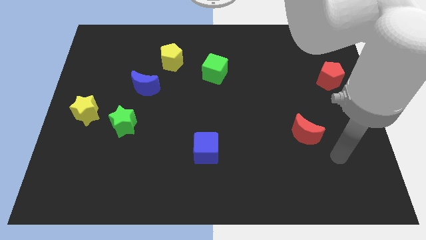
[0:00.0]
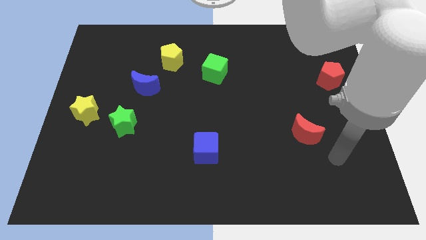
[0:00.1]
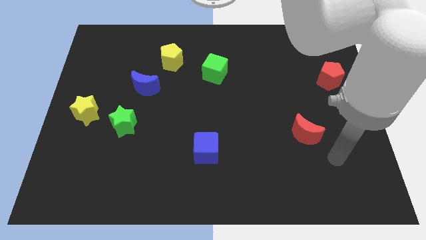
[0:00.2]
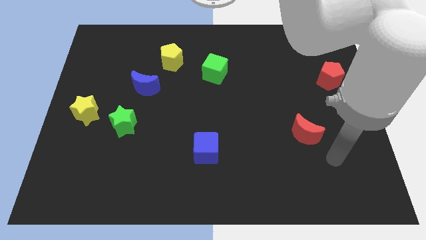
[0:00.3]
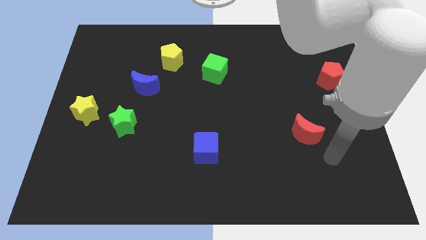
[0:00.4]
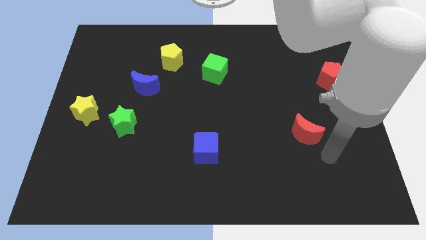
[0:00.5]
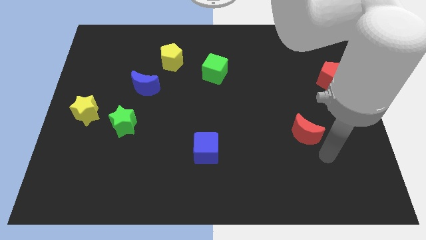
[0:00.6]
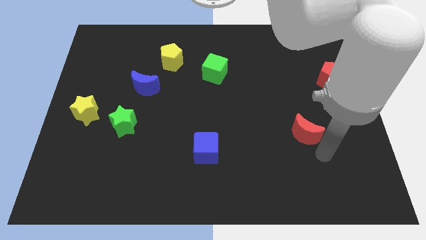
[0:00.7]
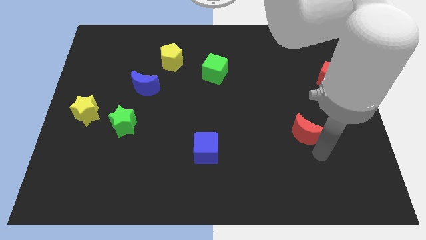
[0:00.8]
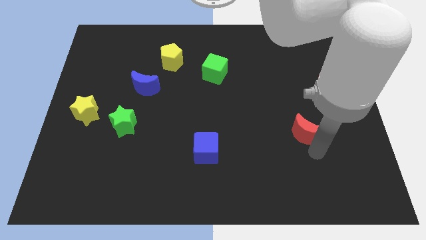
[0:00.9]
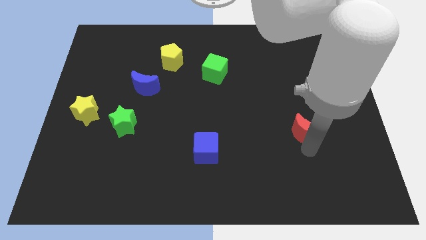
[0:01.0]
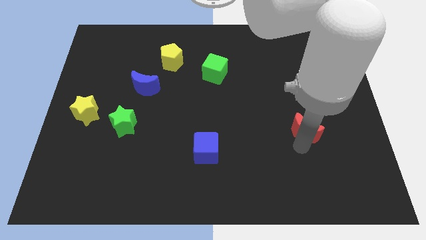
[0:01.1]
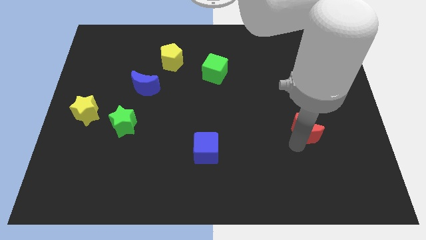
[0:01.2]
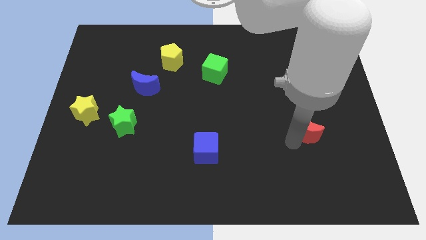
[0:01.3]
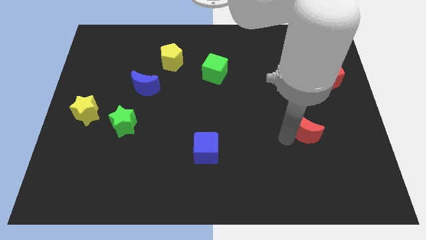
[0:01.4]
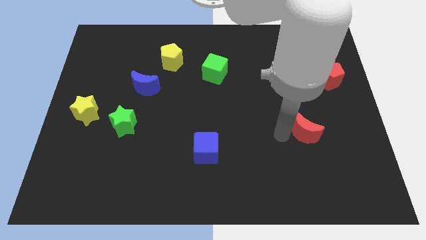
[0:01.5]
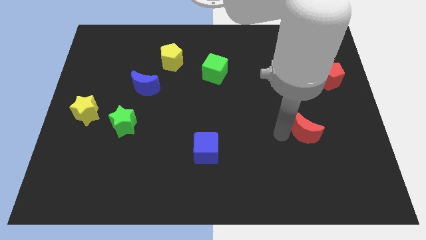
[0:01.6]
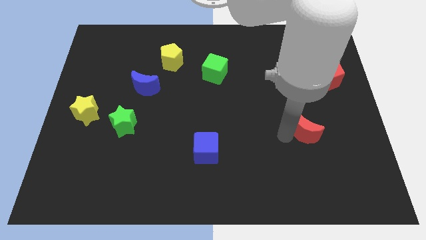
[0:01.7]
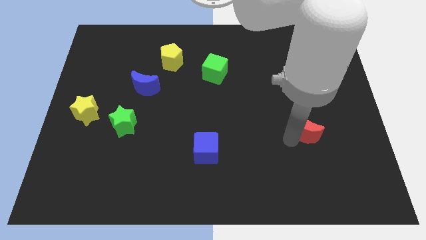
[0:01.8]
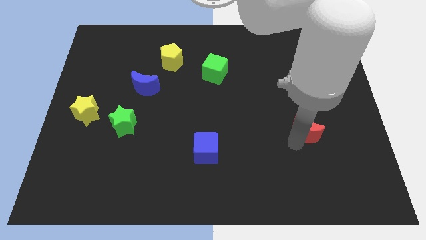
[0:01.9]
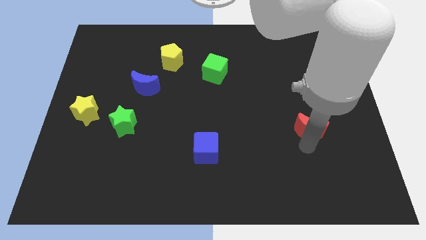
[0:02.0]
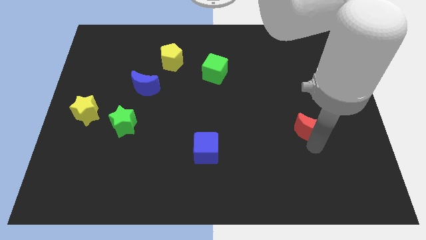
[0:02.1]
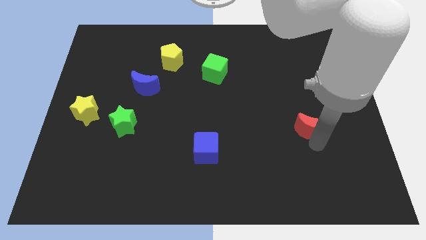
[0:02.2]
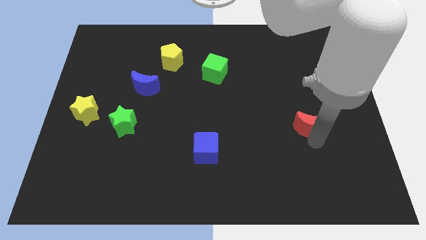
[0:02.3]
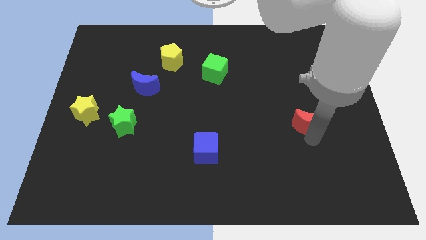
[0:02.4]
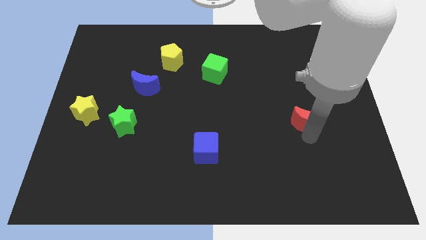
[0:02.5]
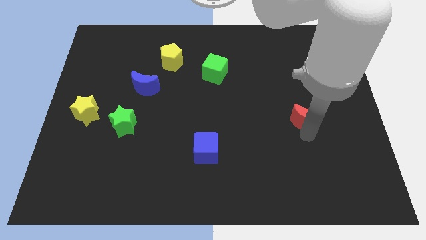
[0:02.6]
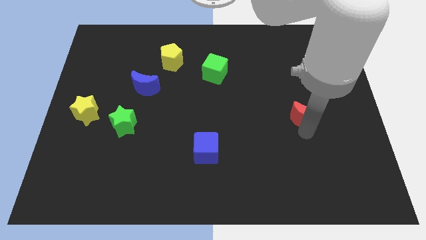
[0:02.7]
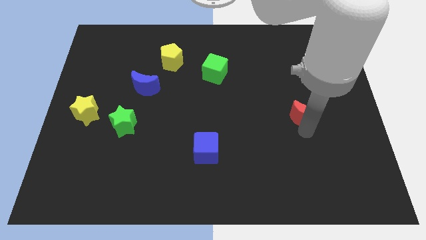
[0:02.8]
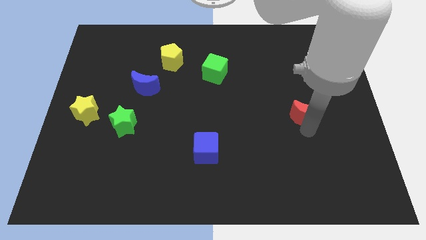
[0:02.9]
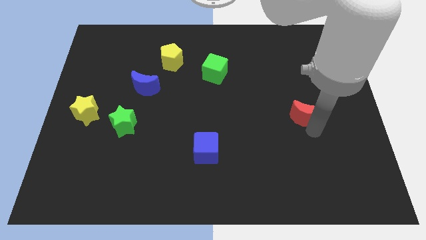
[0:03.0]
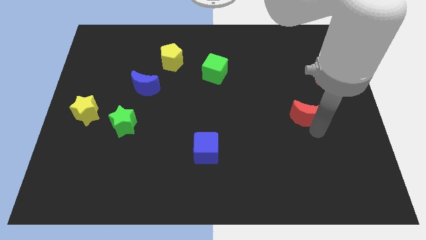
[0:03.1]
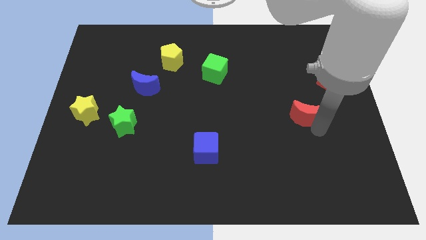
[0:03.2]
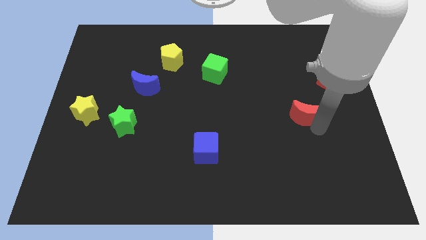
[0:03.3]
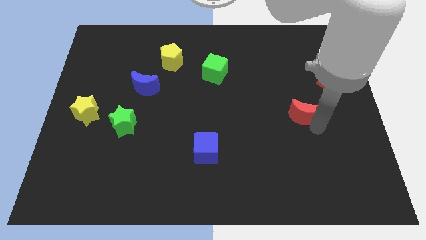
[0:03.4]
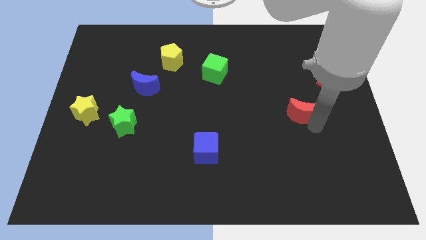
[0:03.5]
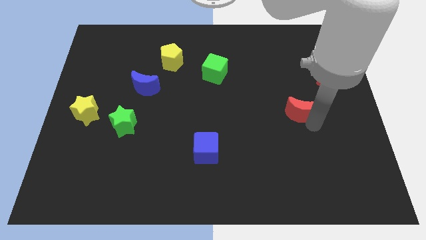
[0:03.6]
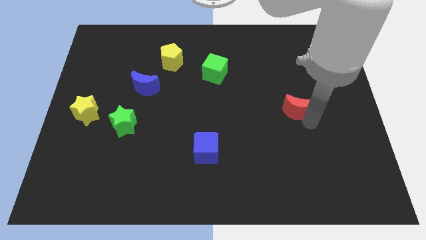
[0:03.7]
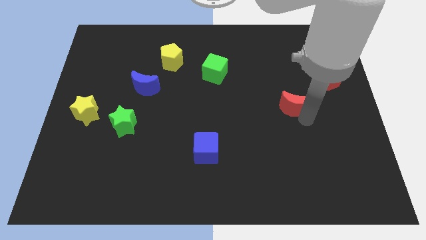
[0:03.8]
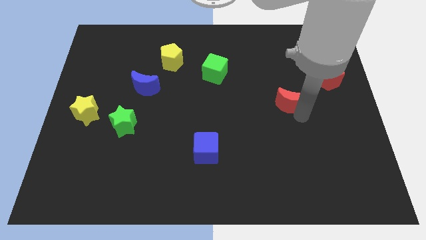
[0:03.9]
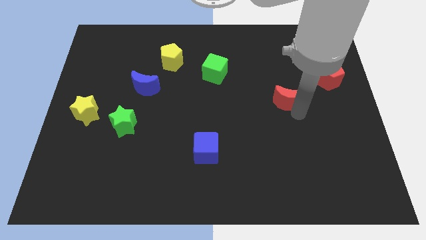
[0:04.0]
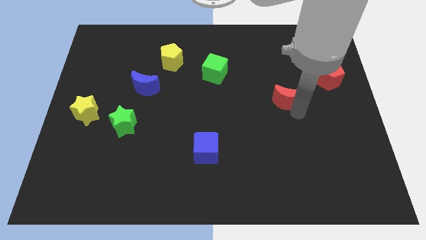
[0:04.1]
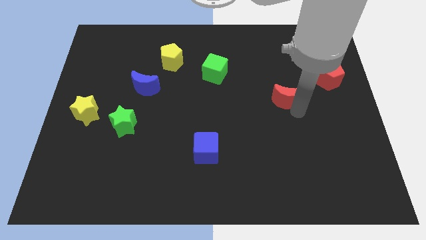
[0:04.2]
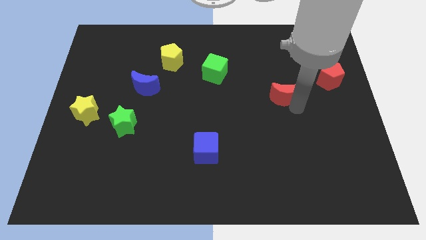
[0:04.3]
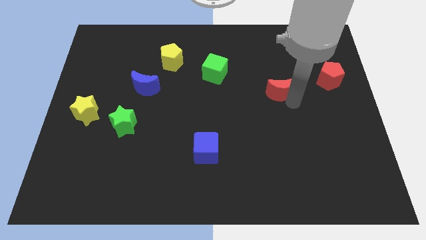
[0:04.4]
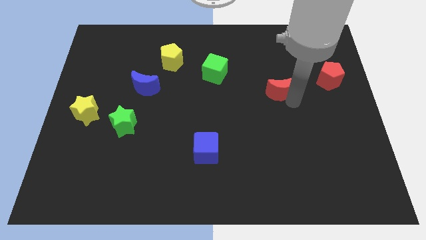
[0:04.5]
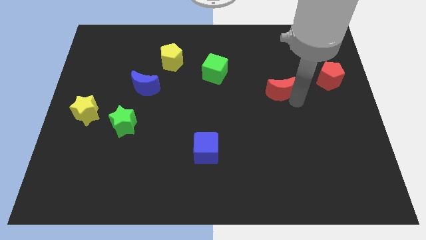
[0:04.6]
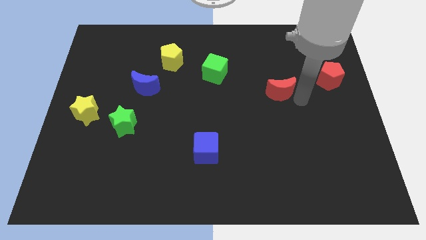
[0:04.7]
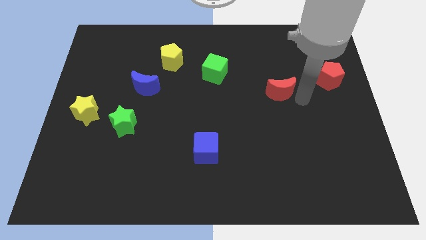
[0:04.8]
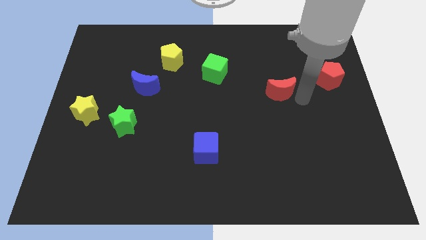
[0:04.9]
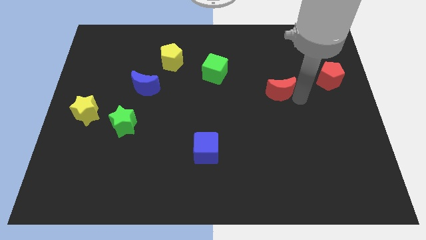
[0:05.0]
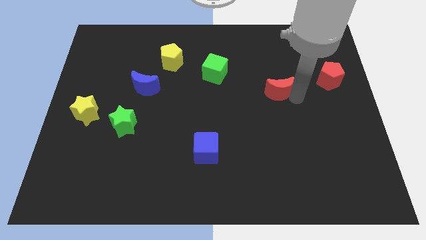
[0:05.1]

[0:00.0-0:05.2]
push red moon parallel to blue moon

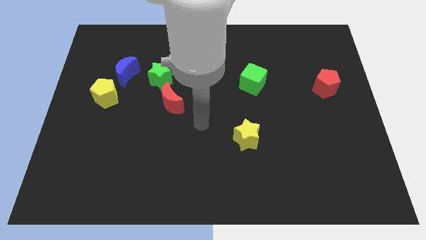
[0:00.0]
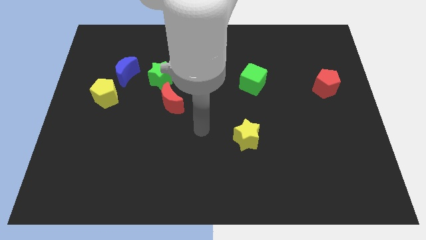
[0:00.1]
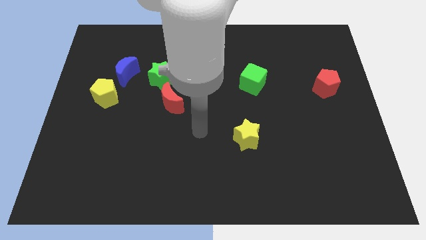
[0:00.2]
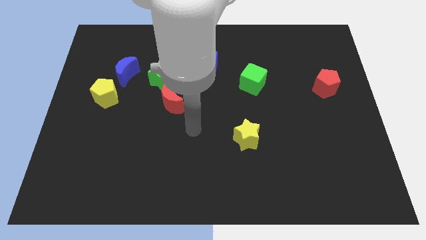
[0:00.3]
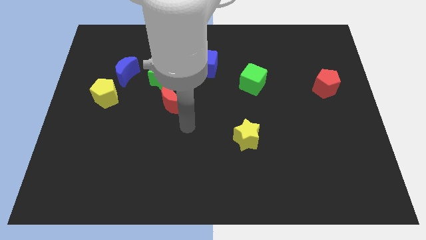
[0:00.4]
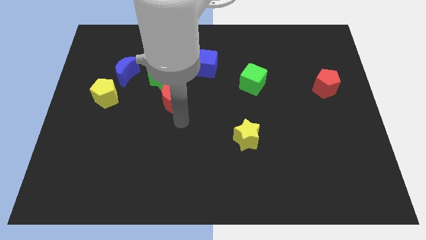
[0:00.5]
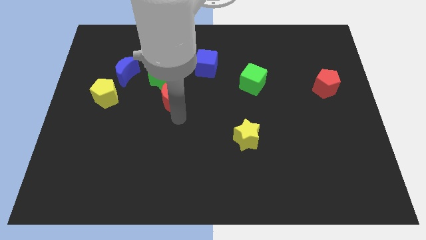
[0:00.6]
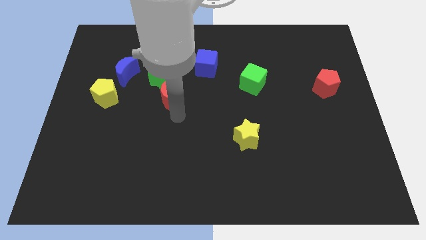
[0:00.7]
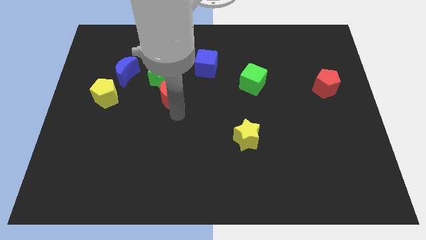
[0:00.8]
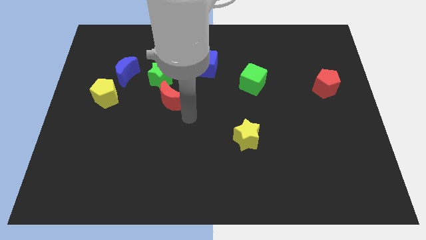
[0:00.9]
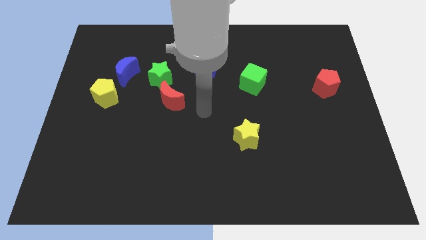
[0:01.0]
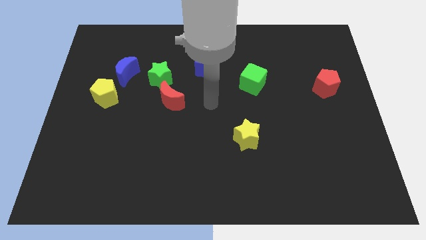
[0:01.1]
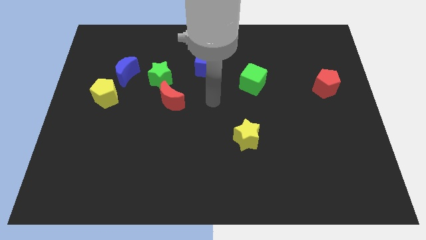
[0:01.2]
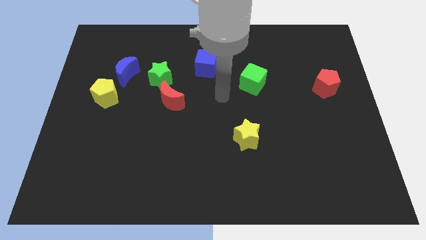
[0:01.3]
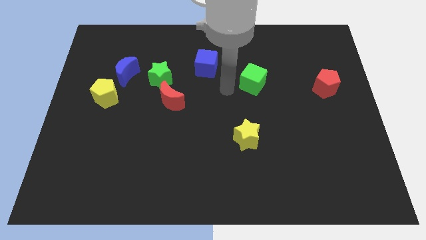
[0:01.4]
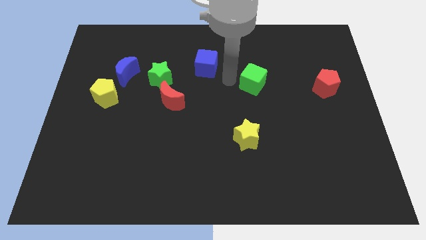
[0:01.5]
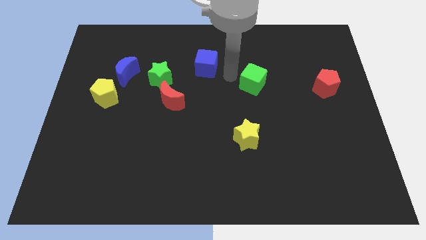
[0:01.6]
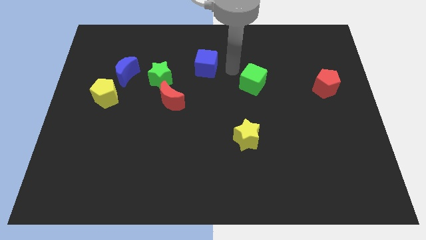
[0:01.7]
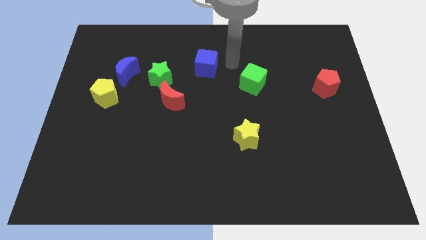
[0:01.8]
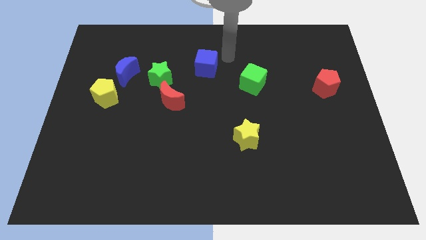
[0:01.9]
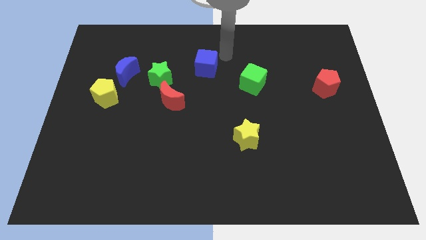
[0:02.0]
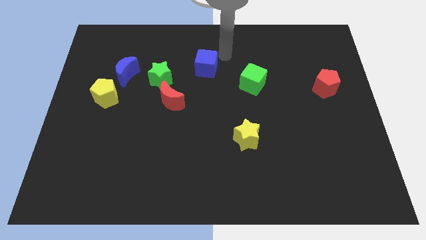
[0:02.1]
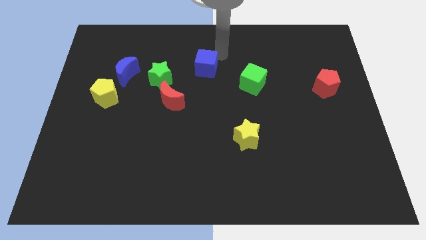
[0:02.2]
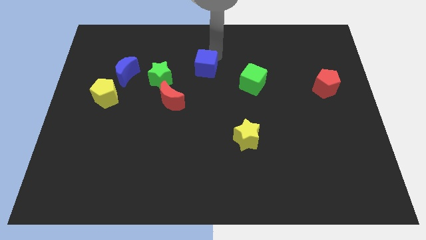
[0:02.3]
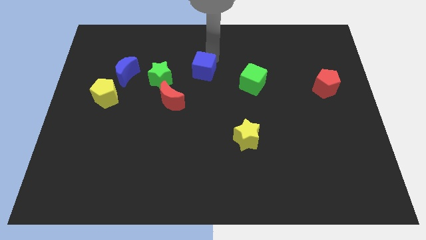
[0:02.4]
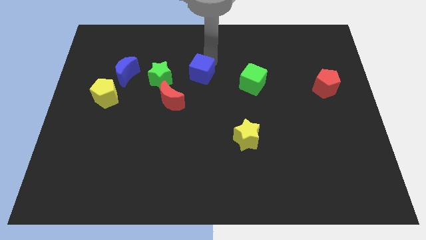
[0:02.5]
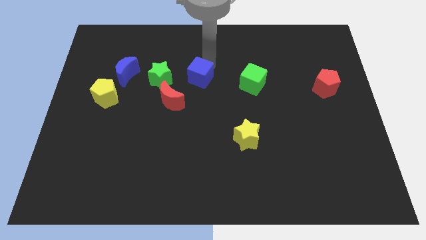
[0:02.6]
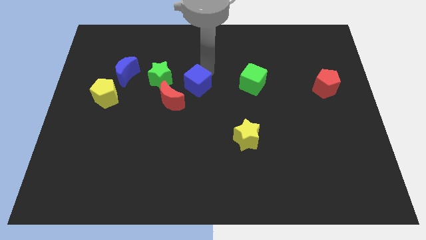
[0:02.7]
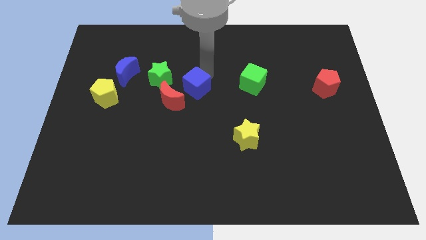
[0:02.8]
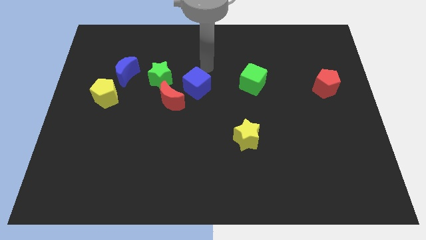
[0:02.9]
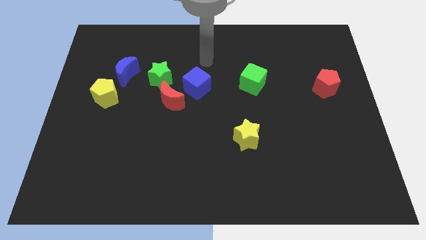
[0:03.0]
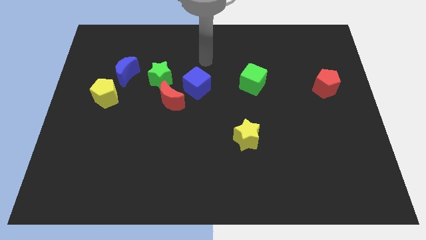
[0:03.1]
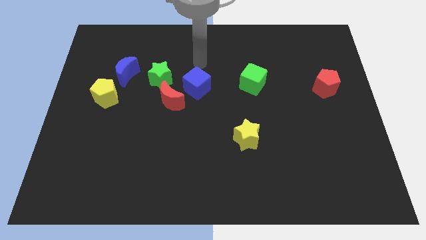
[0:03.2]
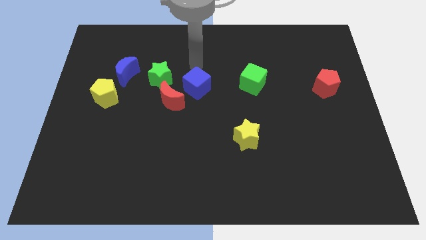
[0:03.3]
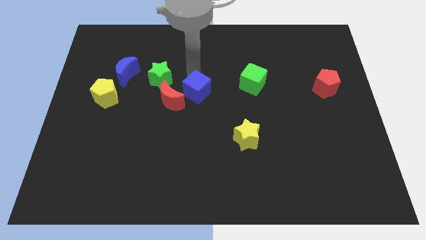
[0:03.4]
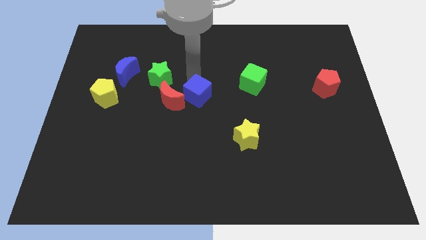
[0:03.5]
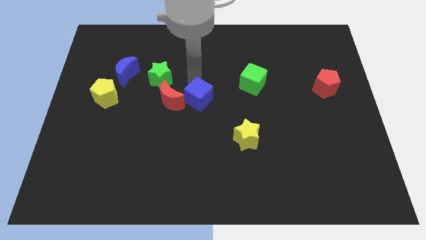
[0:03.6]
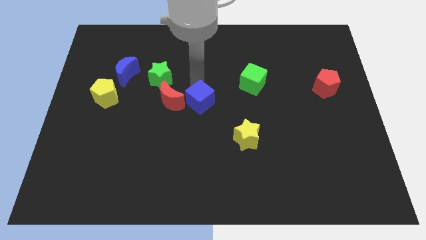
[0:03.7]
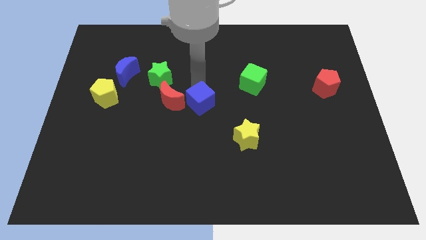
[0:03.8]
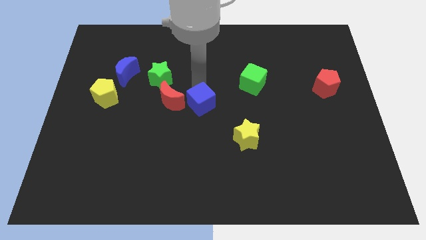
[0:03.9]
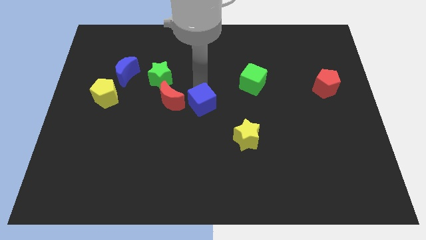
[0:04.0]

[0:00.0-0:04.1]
place the blue cube right to the red crescent
